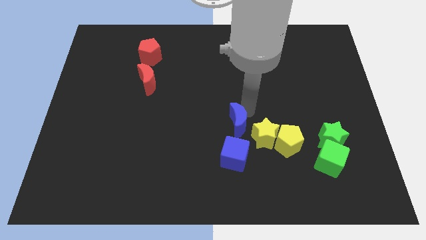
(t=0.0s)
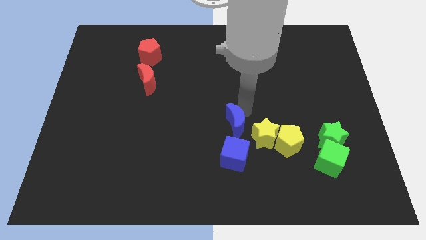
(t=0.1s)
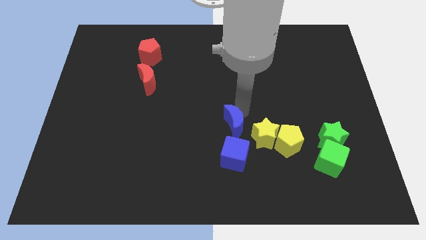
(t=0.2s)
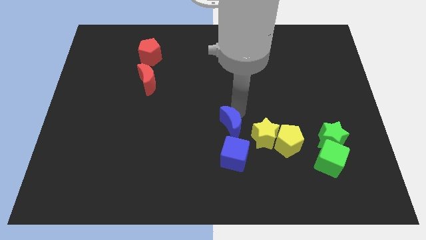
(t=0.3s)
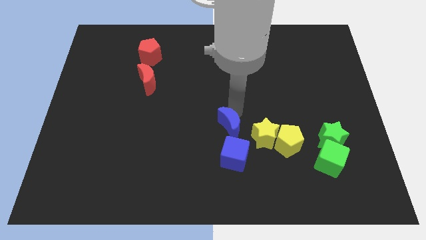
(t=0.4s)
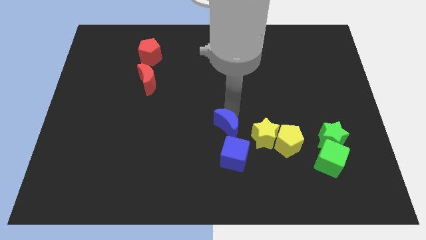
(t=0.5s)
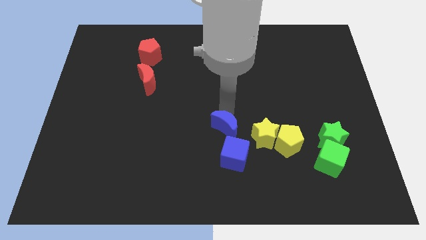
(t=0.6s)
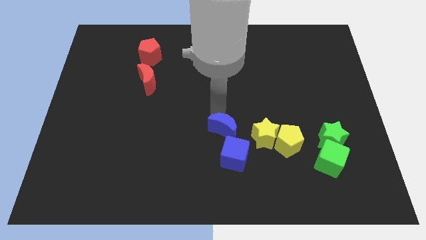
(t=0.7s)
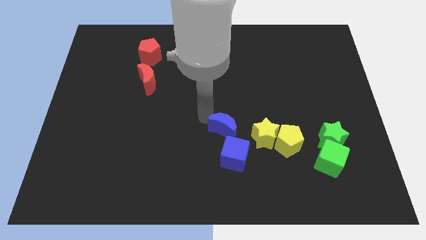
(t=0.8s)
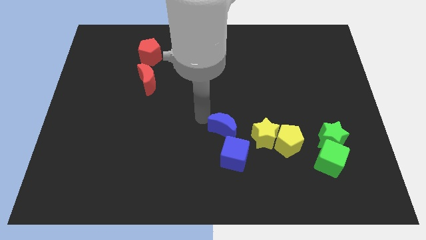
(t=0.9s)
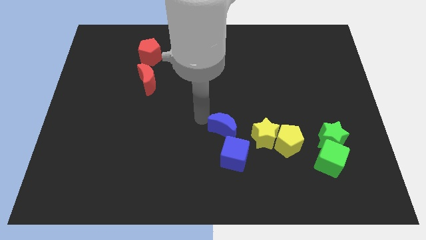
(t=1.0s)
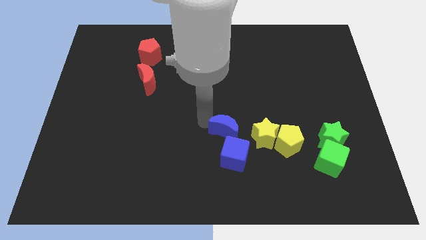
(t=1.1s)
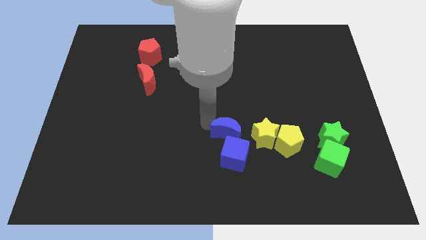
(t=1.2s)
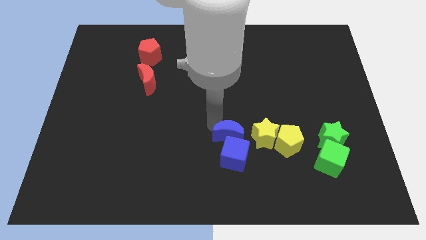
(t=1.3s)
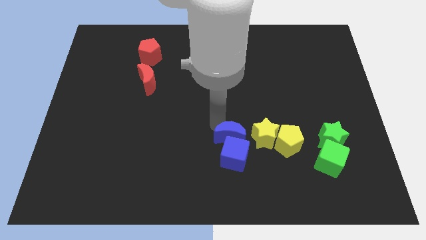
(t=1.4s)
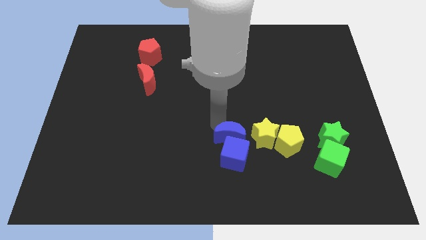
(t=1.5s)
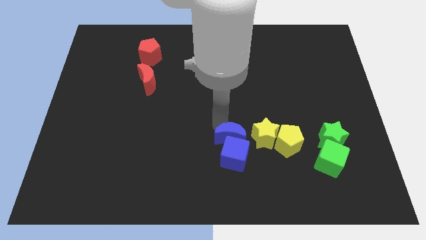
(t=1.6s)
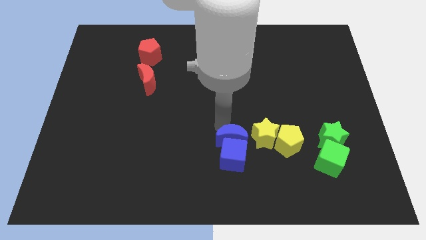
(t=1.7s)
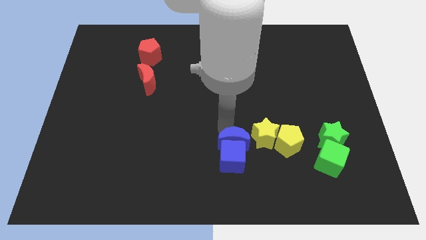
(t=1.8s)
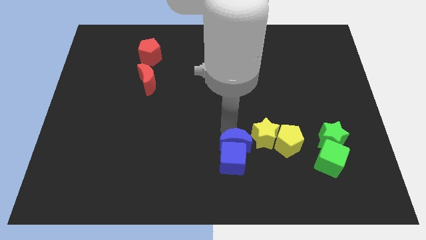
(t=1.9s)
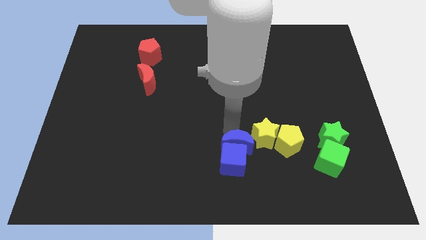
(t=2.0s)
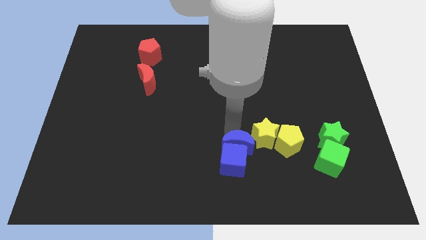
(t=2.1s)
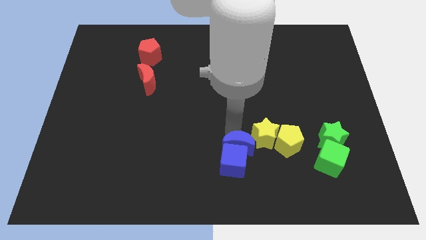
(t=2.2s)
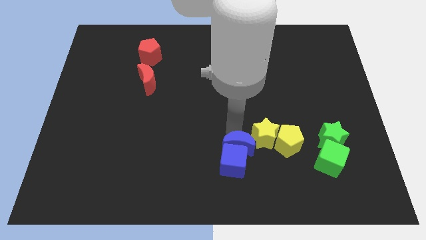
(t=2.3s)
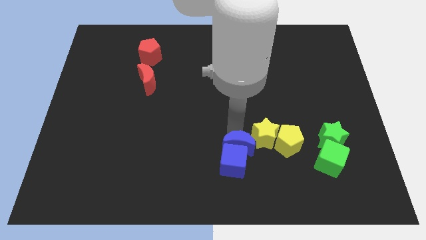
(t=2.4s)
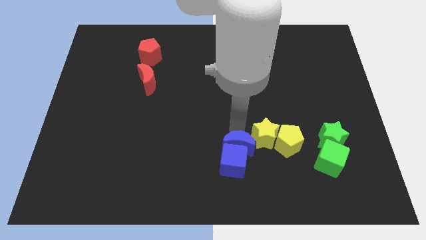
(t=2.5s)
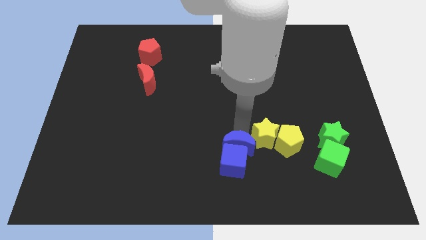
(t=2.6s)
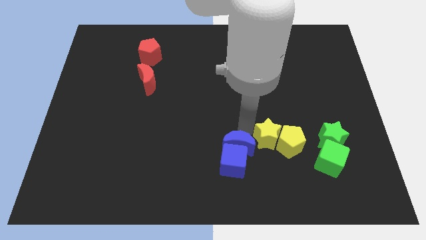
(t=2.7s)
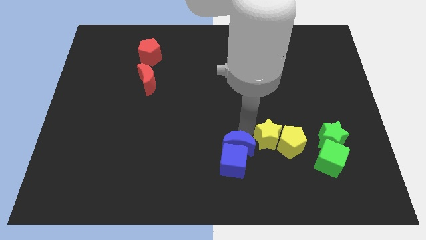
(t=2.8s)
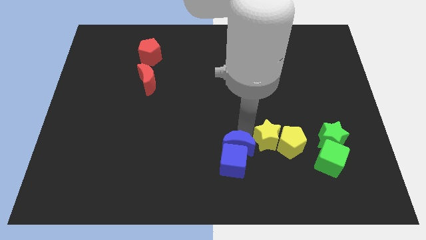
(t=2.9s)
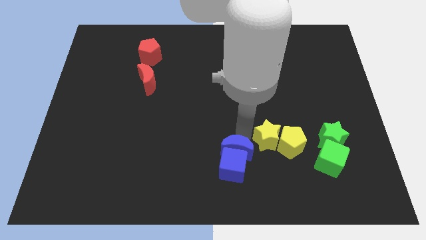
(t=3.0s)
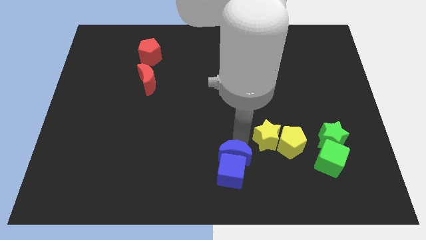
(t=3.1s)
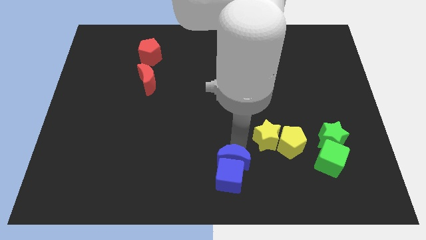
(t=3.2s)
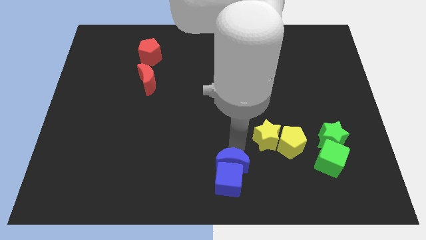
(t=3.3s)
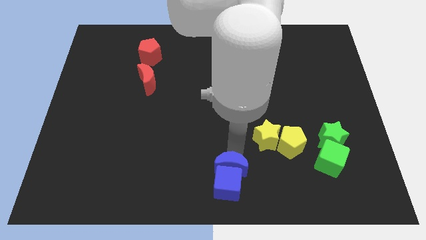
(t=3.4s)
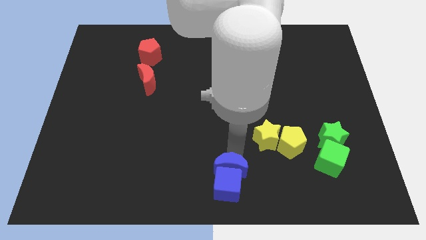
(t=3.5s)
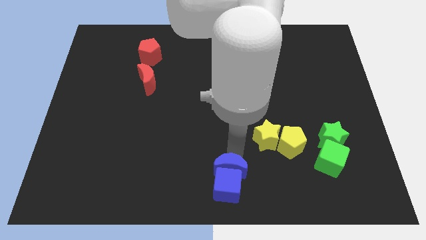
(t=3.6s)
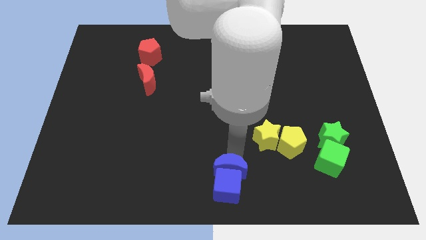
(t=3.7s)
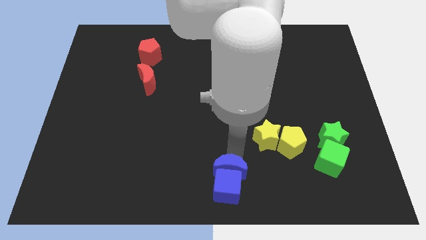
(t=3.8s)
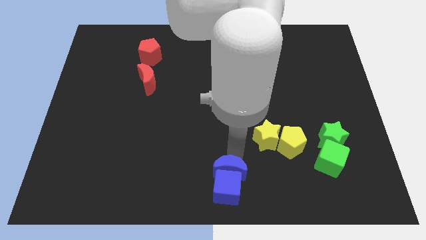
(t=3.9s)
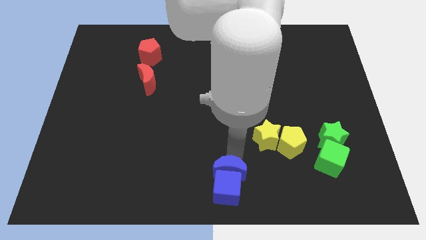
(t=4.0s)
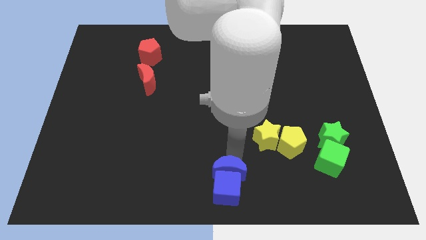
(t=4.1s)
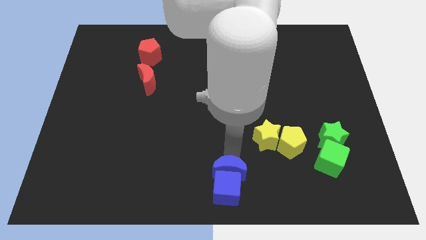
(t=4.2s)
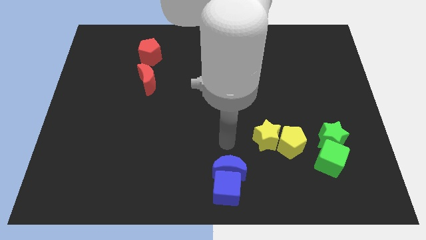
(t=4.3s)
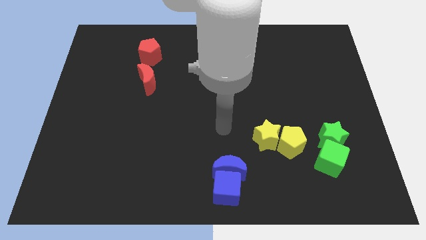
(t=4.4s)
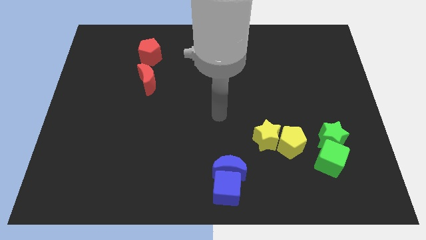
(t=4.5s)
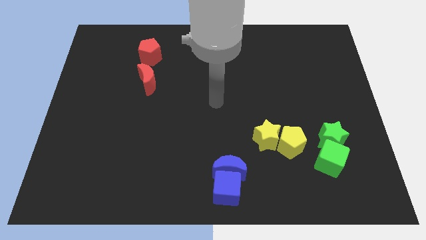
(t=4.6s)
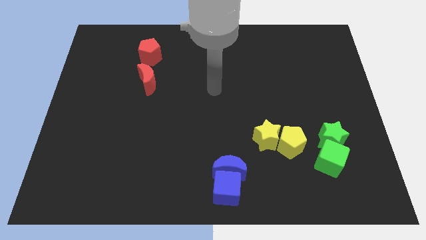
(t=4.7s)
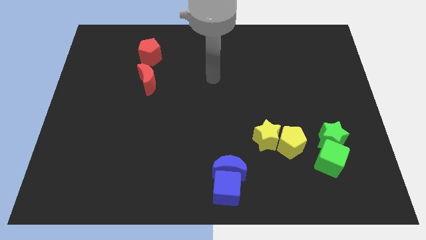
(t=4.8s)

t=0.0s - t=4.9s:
push the blue crescent along with cube to bottom center of the board

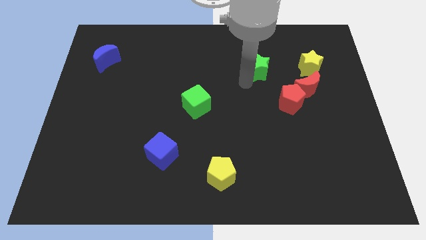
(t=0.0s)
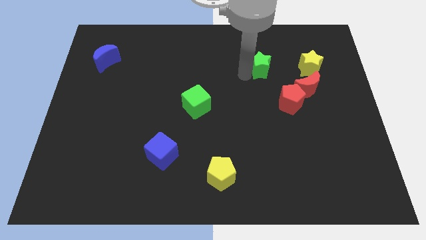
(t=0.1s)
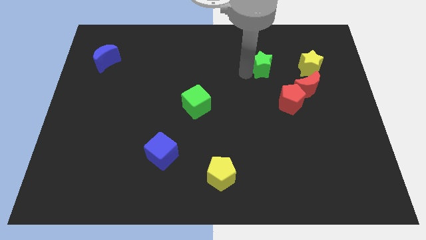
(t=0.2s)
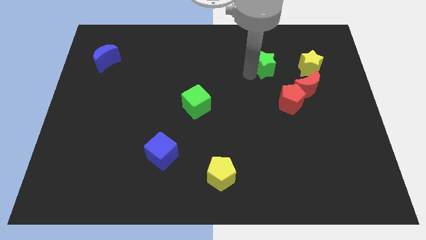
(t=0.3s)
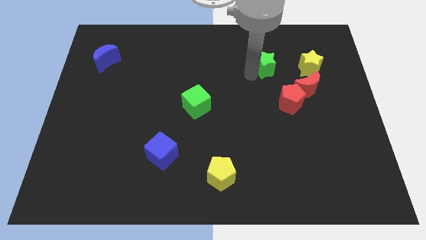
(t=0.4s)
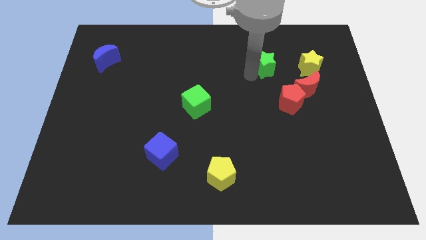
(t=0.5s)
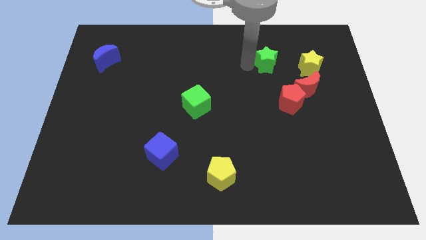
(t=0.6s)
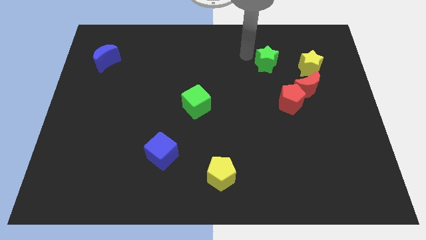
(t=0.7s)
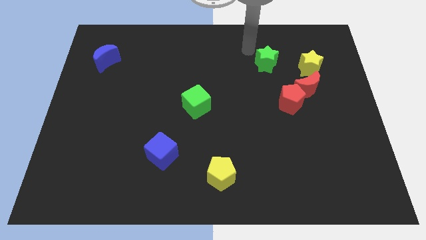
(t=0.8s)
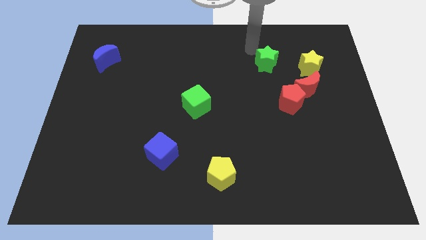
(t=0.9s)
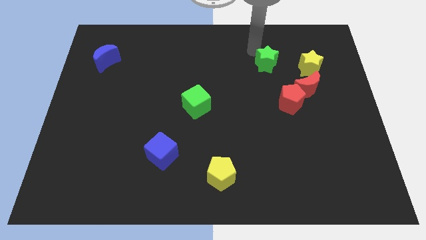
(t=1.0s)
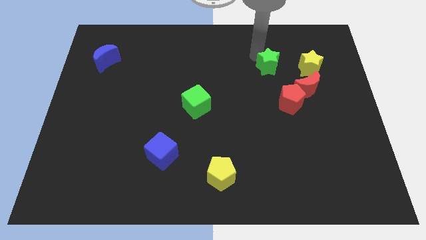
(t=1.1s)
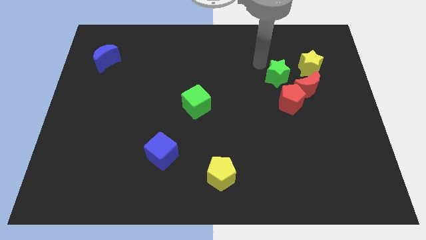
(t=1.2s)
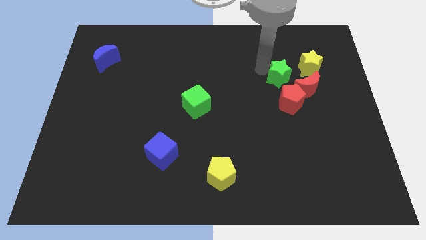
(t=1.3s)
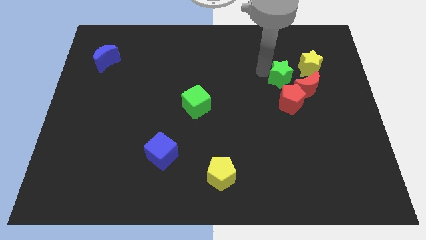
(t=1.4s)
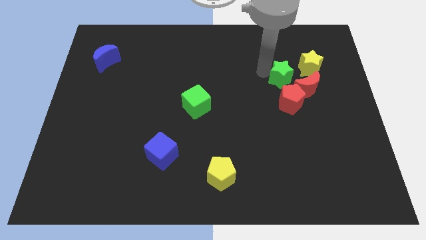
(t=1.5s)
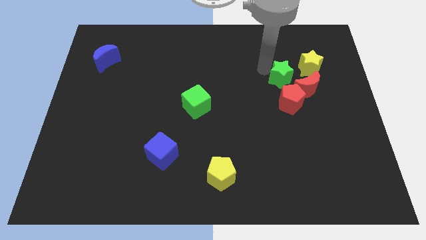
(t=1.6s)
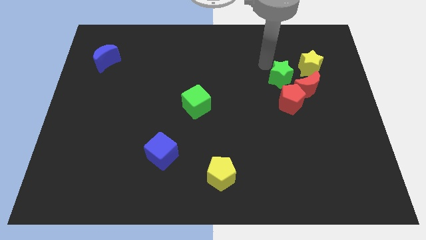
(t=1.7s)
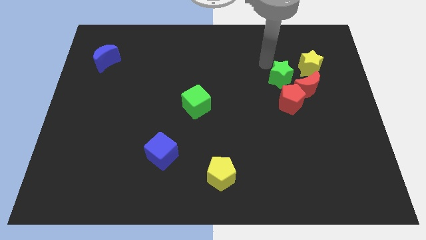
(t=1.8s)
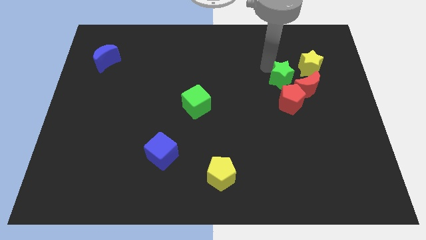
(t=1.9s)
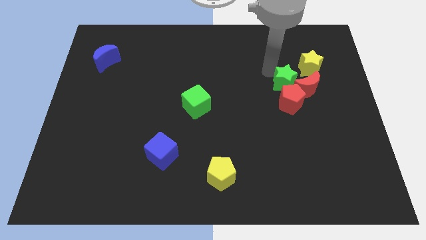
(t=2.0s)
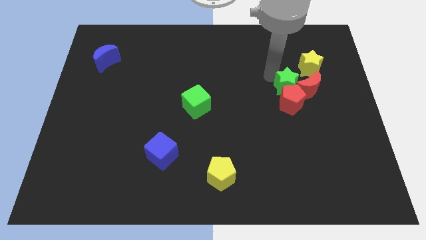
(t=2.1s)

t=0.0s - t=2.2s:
move the green star into the star

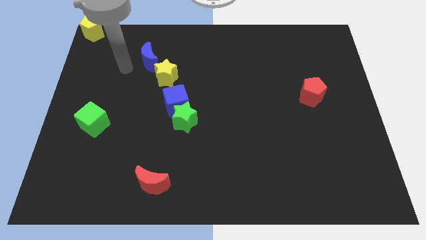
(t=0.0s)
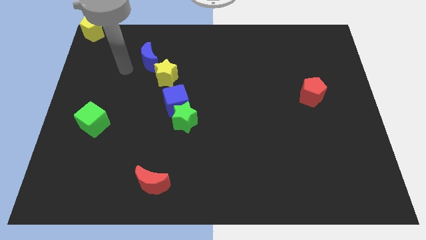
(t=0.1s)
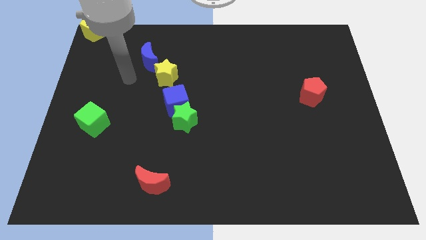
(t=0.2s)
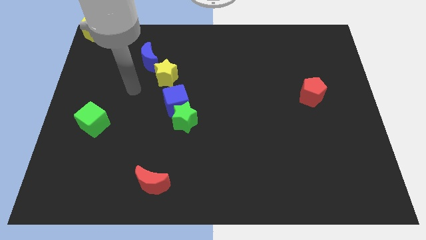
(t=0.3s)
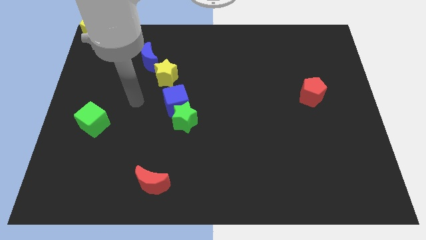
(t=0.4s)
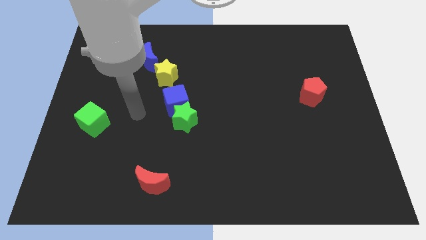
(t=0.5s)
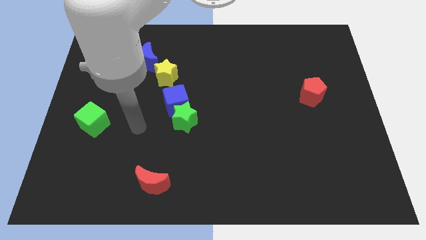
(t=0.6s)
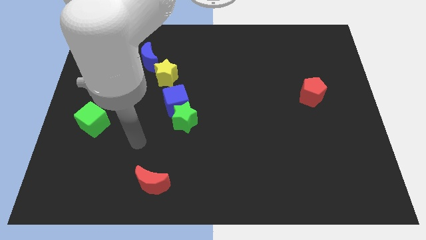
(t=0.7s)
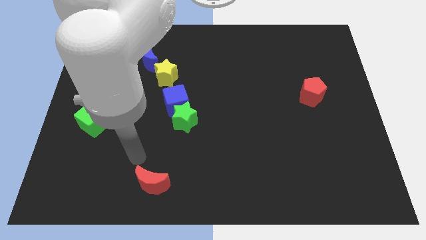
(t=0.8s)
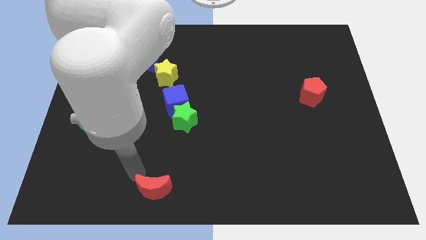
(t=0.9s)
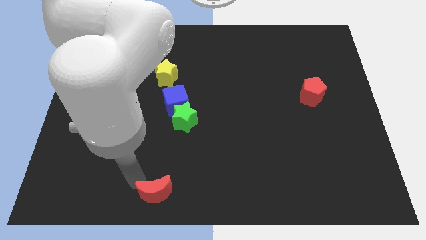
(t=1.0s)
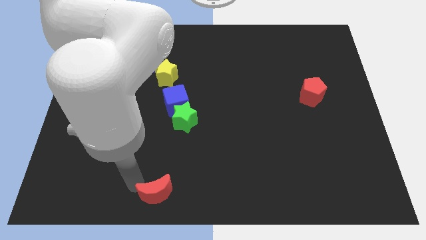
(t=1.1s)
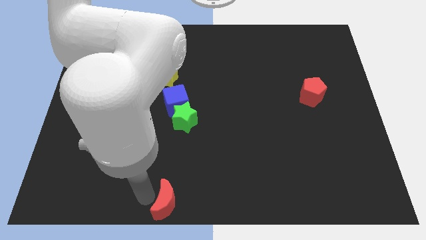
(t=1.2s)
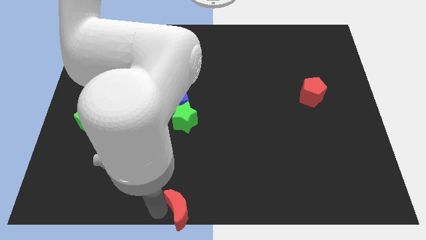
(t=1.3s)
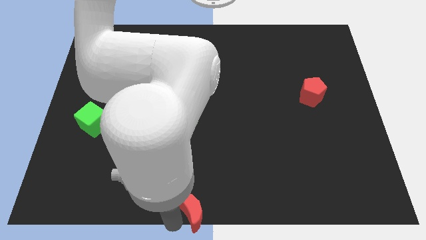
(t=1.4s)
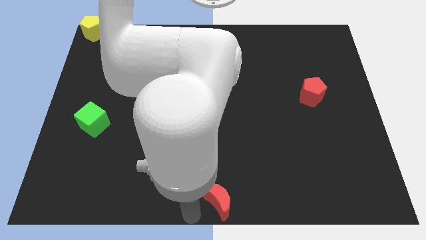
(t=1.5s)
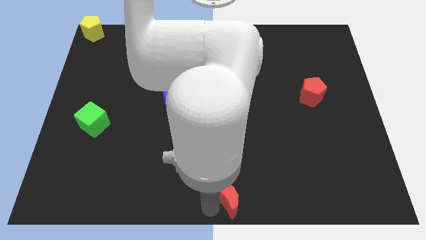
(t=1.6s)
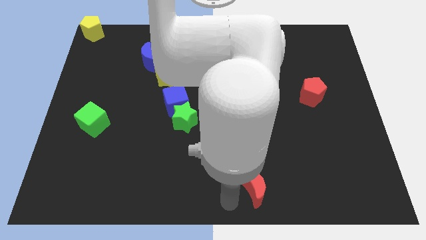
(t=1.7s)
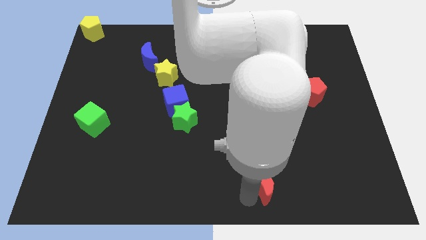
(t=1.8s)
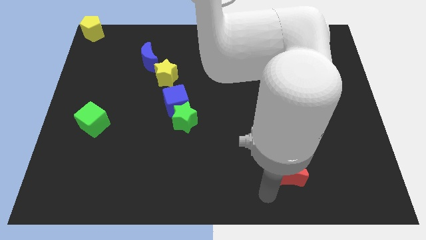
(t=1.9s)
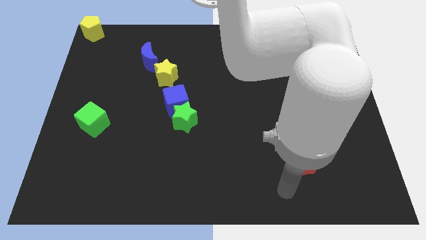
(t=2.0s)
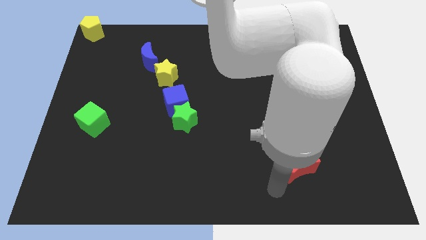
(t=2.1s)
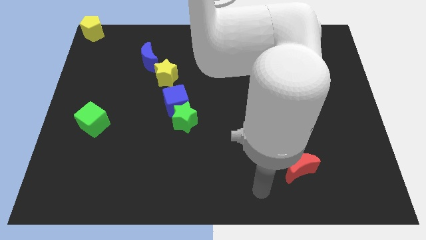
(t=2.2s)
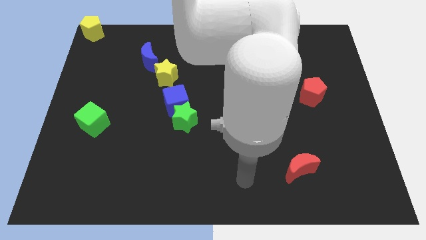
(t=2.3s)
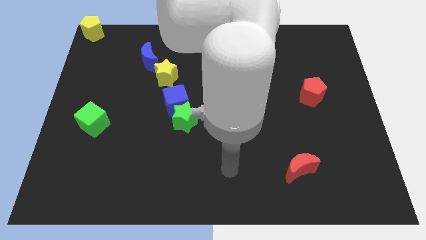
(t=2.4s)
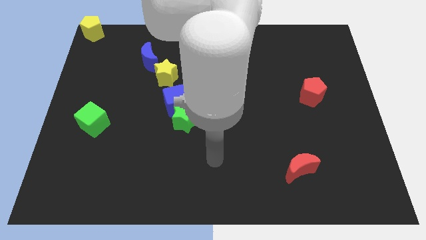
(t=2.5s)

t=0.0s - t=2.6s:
move the red crescent to the bottom of the red pentagon
